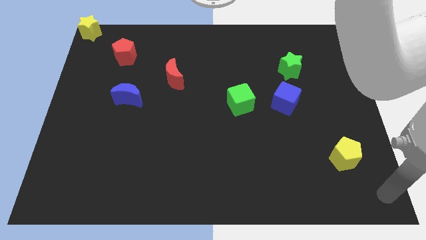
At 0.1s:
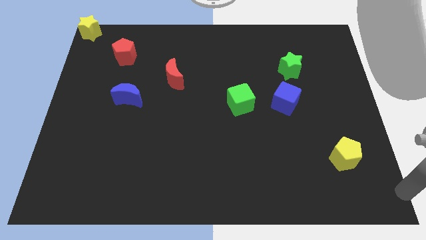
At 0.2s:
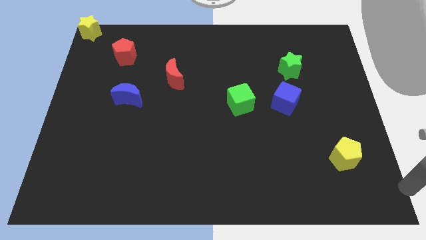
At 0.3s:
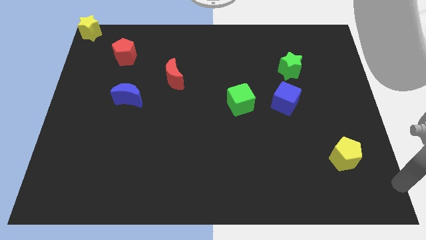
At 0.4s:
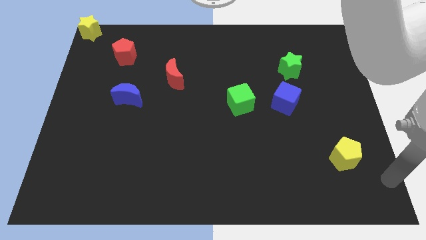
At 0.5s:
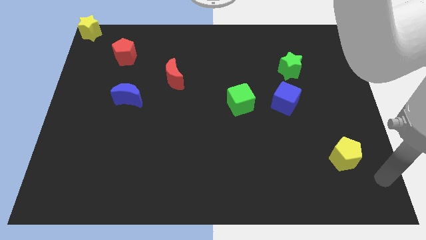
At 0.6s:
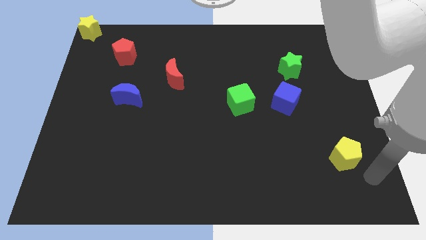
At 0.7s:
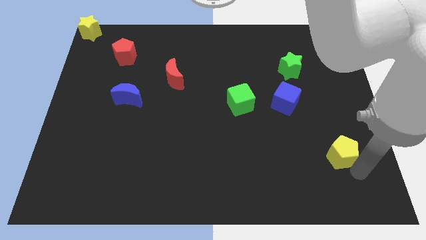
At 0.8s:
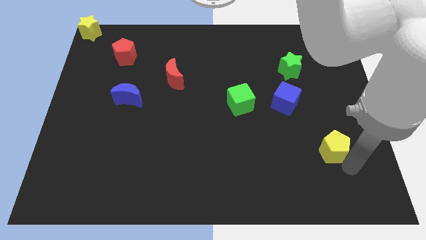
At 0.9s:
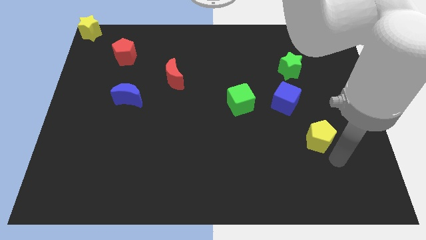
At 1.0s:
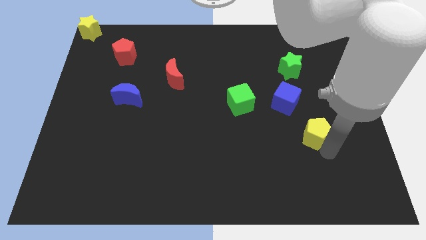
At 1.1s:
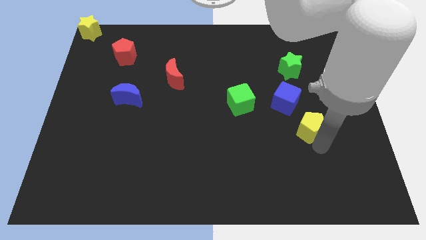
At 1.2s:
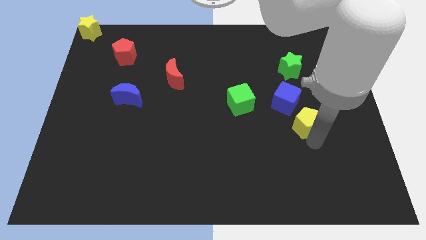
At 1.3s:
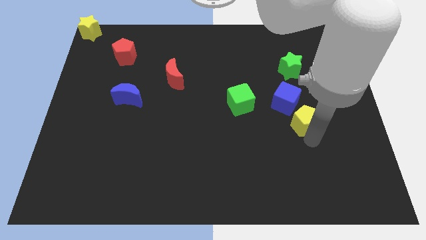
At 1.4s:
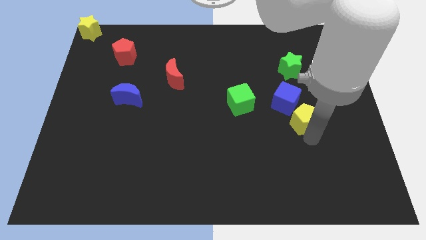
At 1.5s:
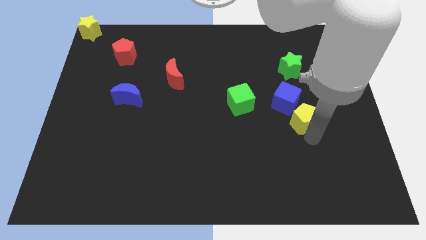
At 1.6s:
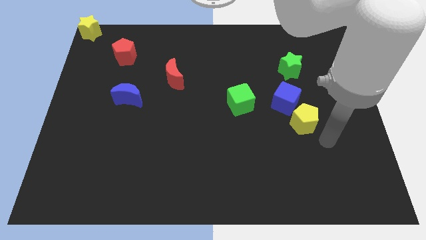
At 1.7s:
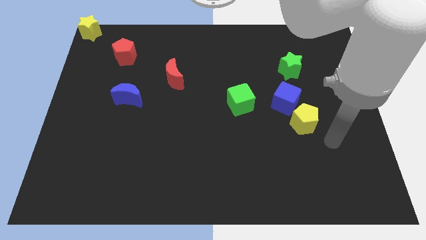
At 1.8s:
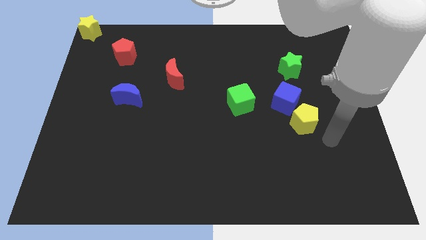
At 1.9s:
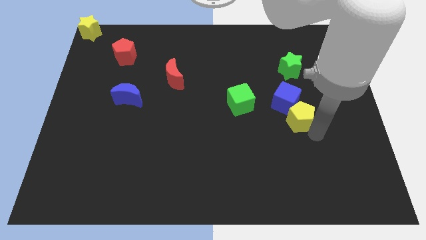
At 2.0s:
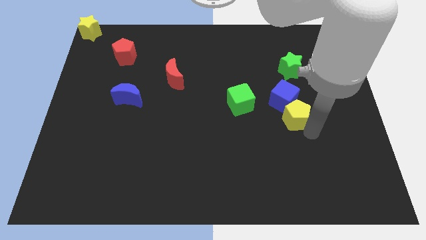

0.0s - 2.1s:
push the yellow pentagon diagonally bottom right to blue cube

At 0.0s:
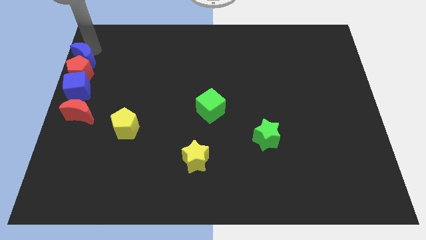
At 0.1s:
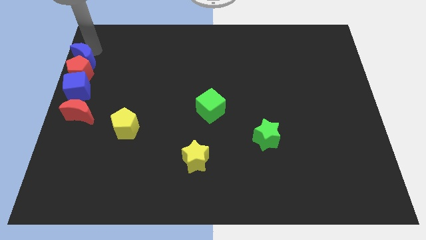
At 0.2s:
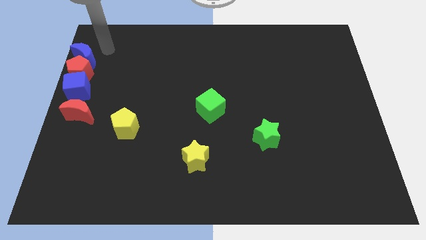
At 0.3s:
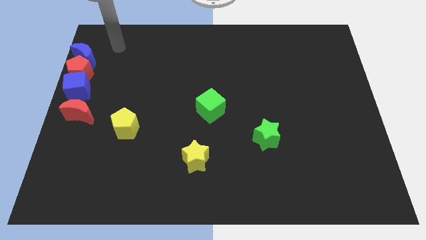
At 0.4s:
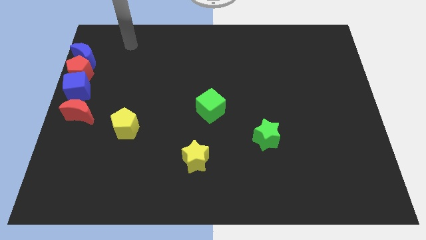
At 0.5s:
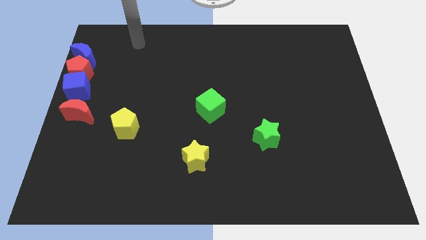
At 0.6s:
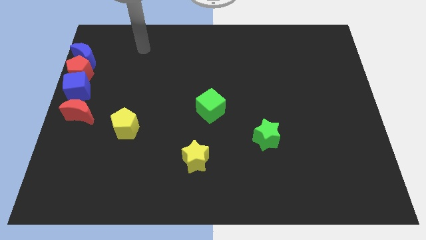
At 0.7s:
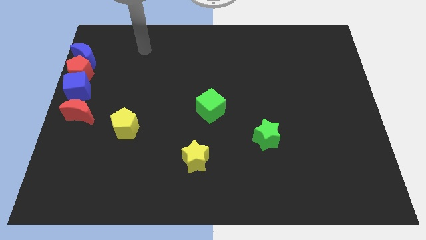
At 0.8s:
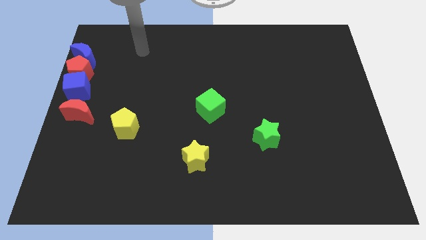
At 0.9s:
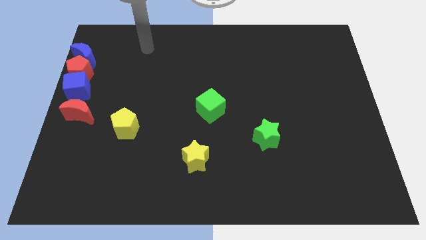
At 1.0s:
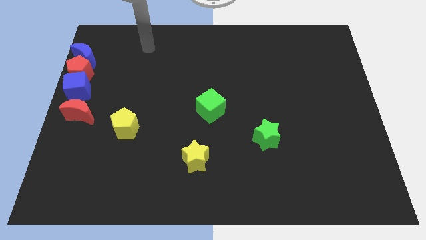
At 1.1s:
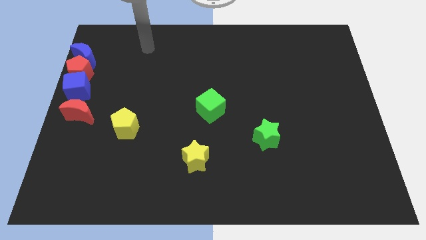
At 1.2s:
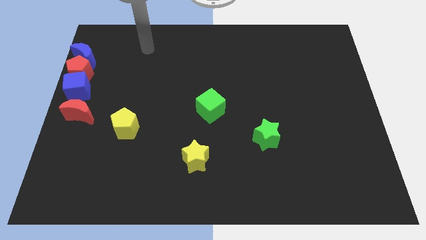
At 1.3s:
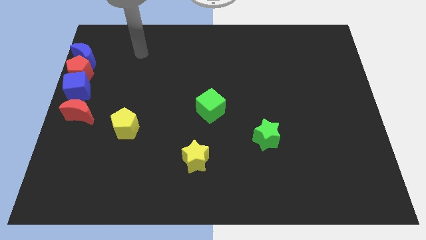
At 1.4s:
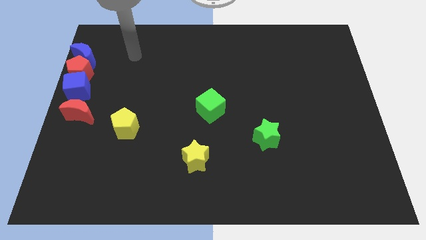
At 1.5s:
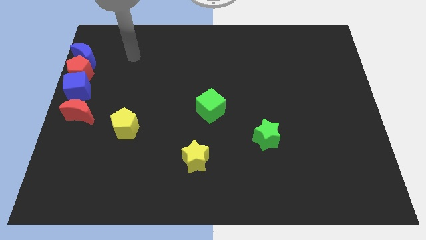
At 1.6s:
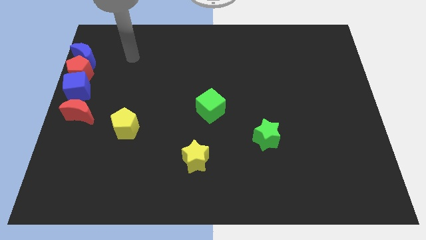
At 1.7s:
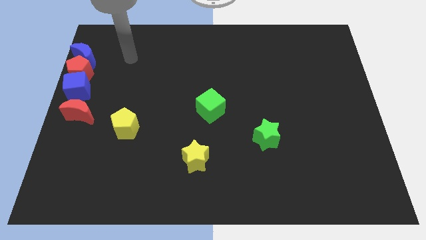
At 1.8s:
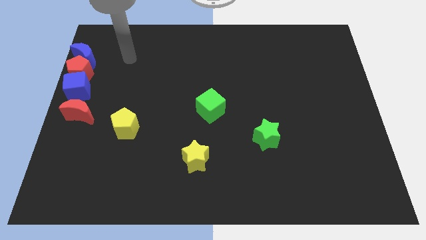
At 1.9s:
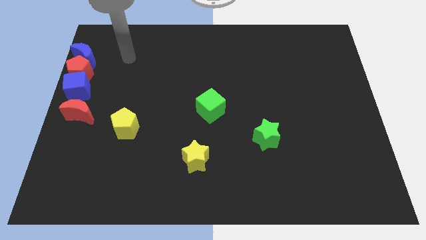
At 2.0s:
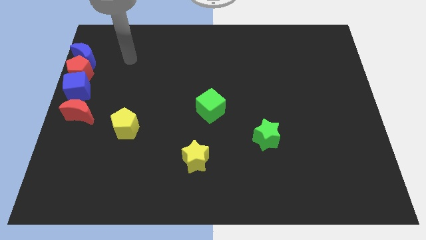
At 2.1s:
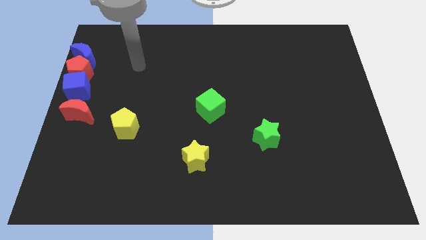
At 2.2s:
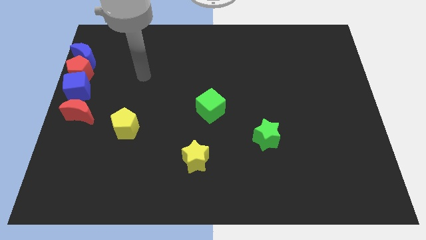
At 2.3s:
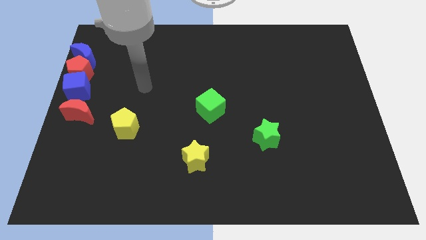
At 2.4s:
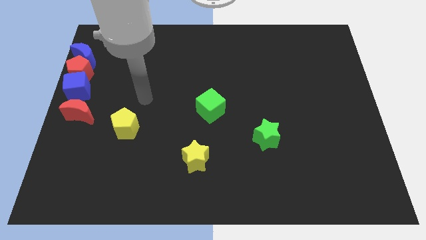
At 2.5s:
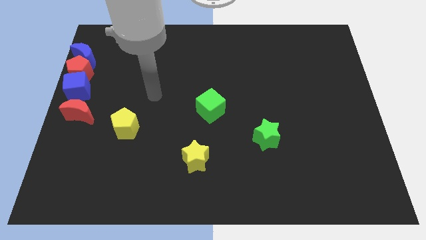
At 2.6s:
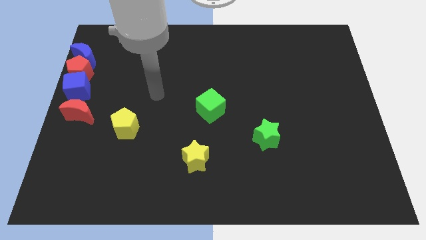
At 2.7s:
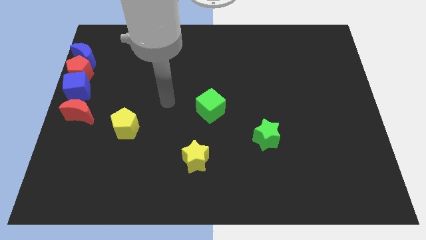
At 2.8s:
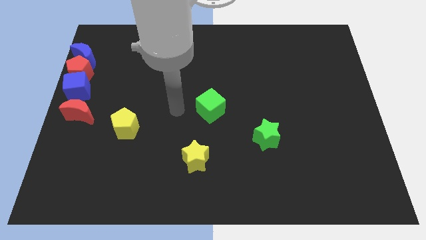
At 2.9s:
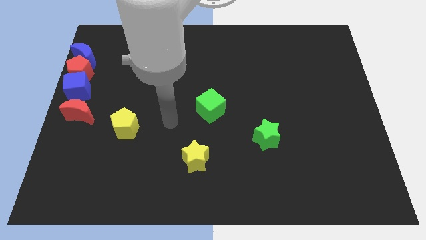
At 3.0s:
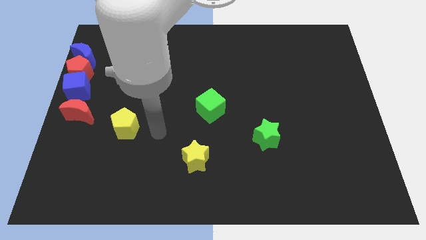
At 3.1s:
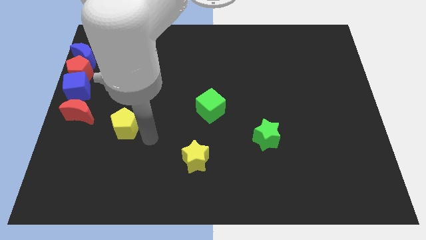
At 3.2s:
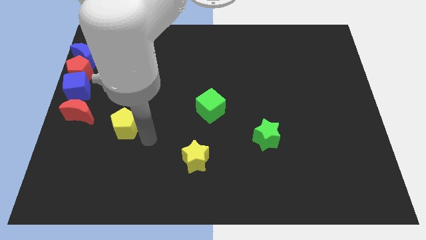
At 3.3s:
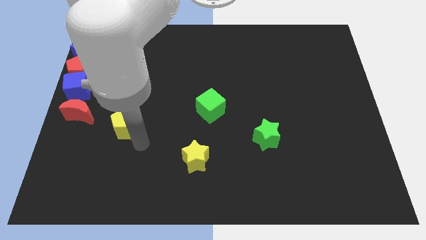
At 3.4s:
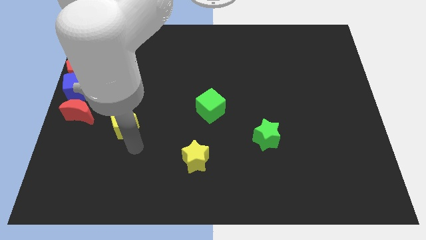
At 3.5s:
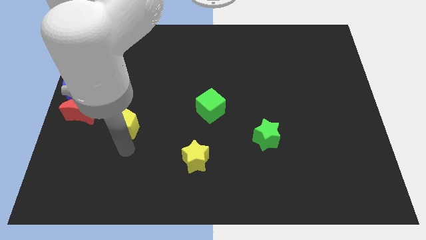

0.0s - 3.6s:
put your hand away from the blue moon

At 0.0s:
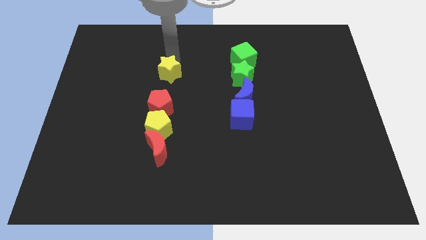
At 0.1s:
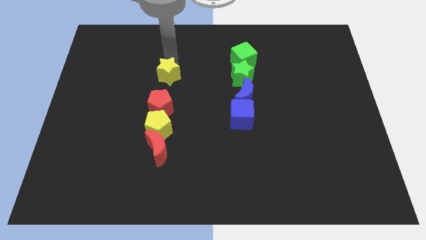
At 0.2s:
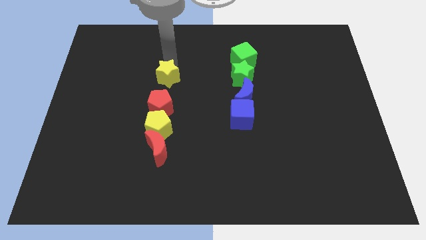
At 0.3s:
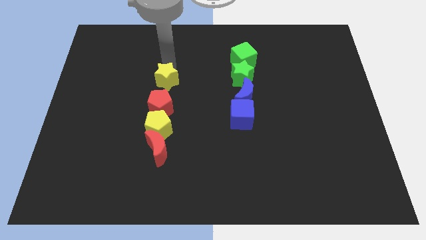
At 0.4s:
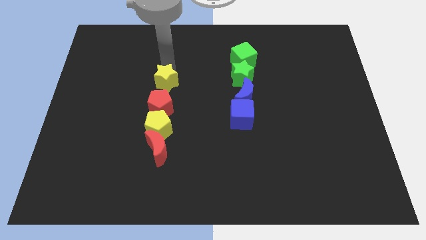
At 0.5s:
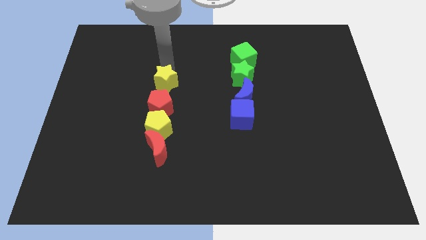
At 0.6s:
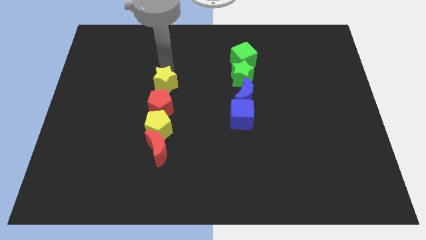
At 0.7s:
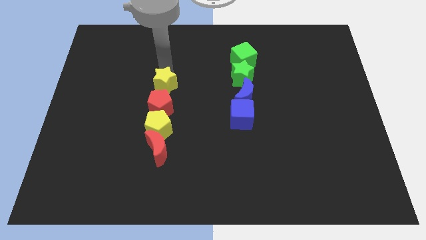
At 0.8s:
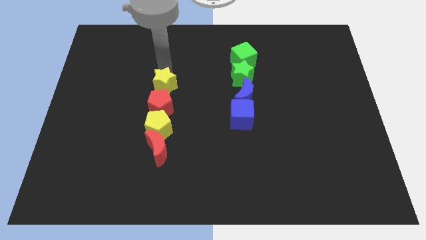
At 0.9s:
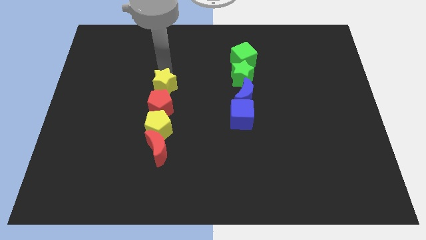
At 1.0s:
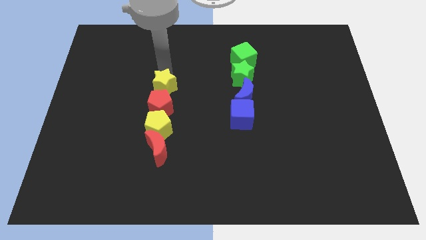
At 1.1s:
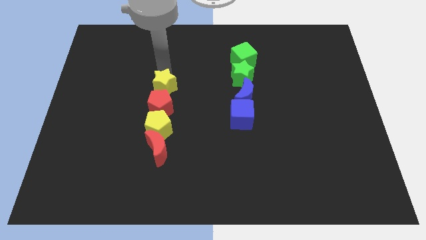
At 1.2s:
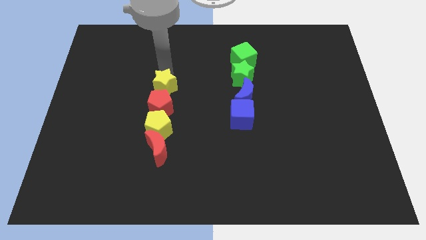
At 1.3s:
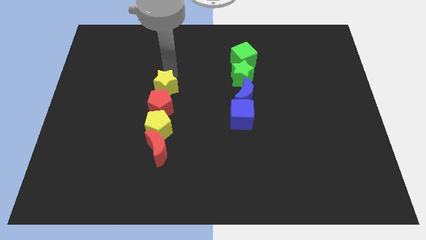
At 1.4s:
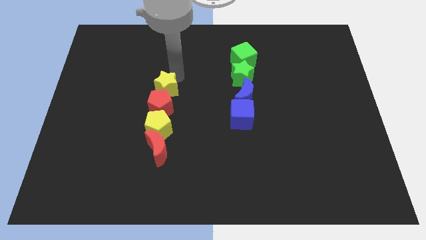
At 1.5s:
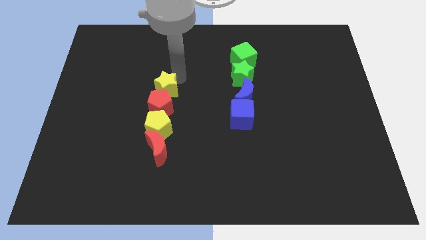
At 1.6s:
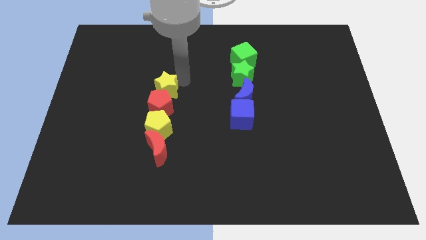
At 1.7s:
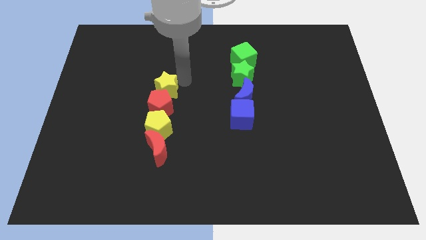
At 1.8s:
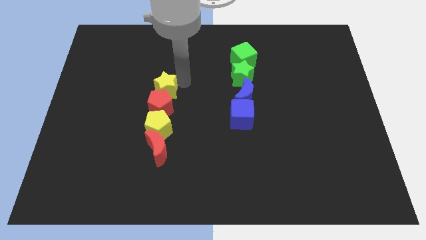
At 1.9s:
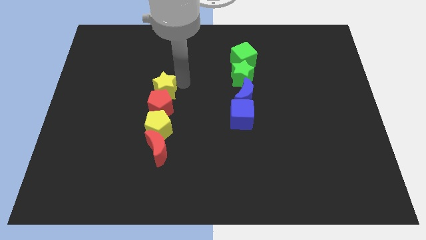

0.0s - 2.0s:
move the yellow star to the top of the red pentagon

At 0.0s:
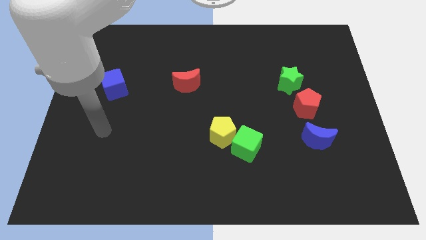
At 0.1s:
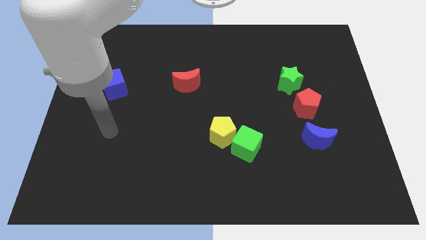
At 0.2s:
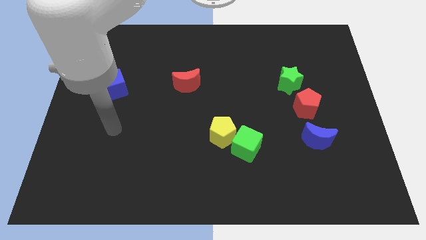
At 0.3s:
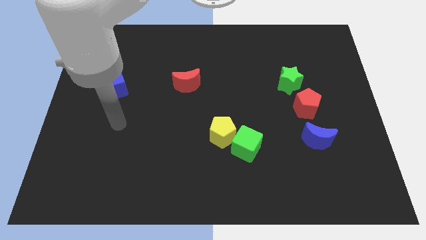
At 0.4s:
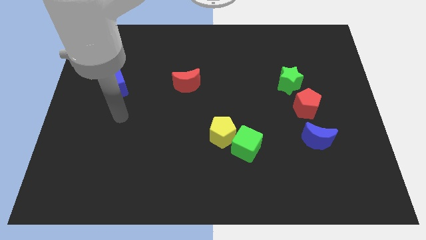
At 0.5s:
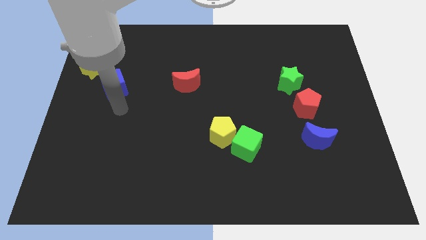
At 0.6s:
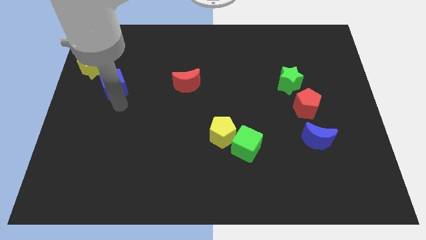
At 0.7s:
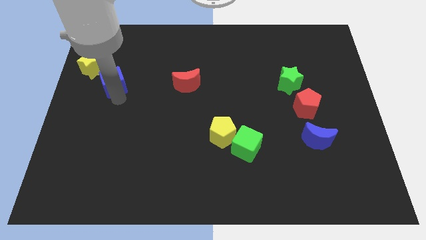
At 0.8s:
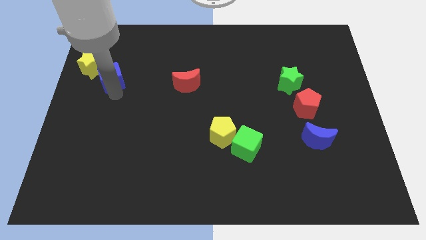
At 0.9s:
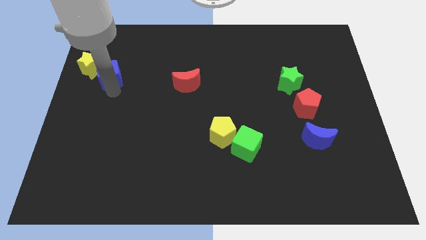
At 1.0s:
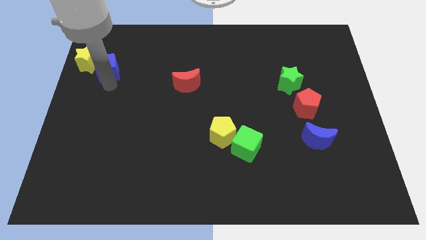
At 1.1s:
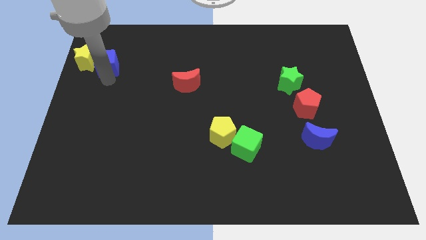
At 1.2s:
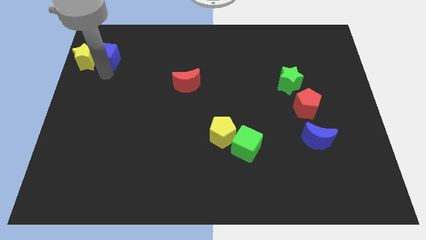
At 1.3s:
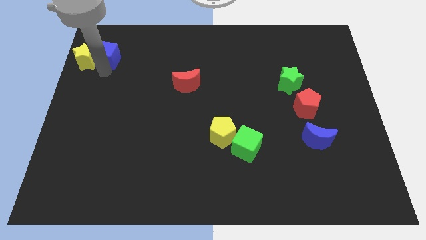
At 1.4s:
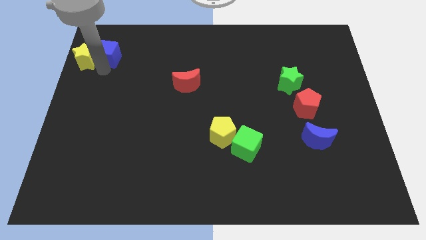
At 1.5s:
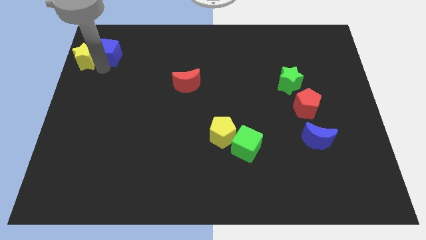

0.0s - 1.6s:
push the blue cube into the yellow star
